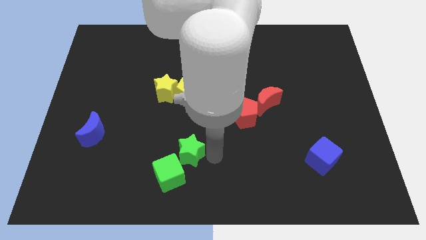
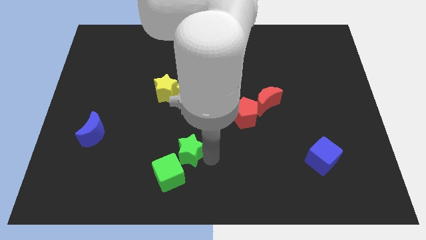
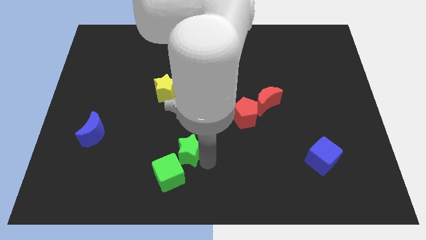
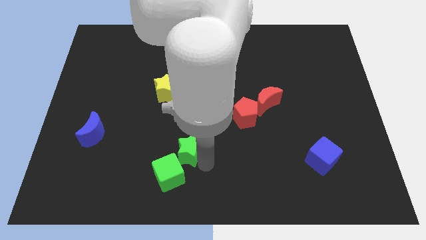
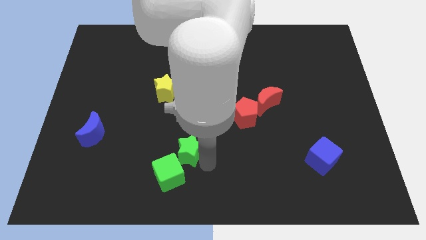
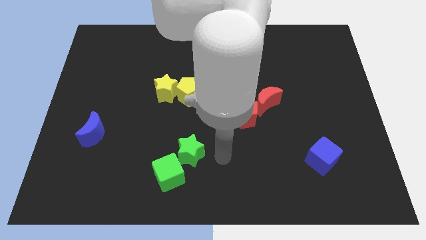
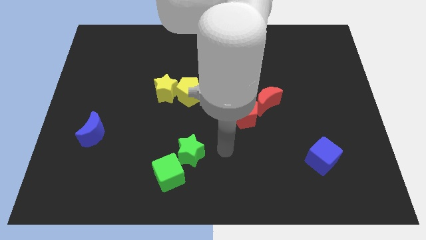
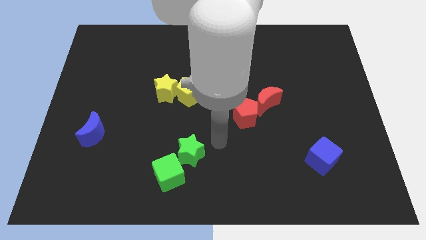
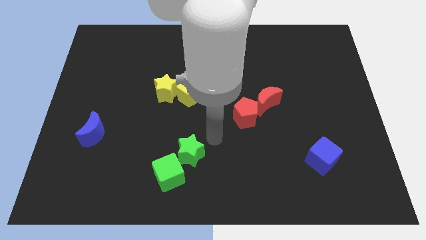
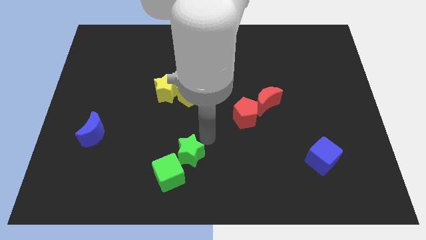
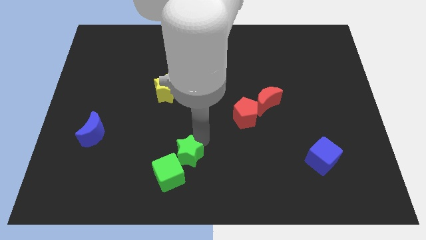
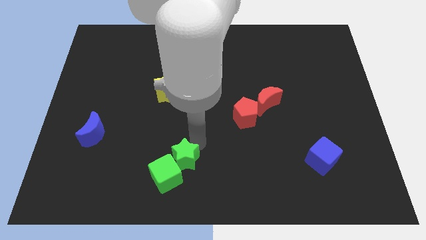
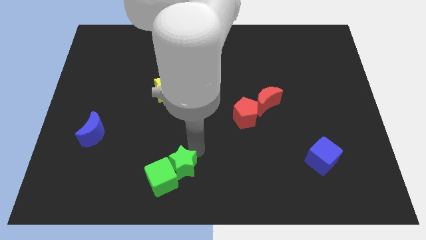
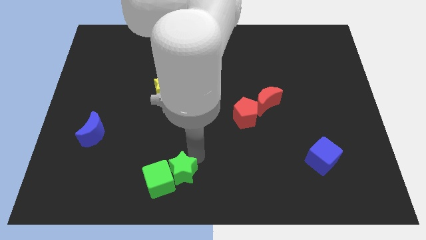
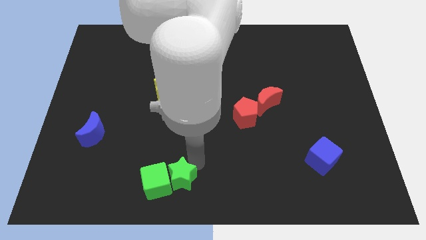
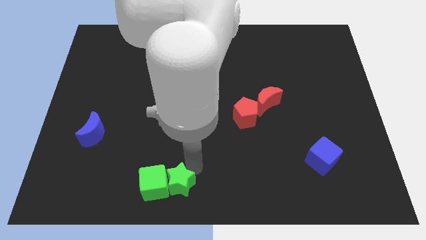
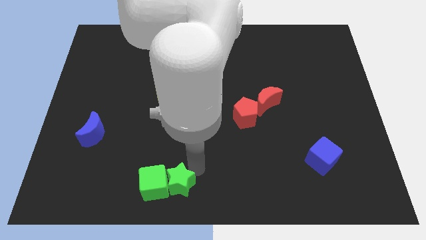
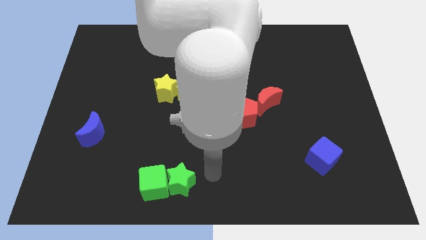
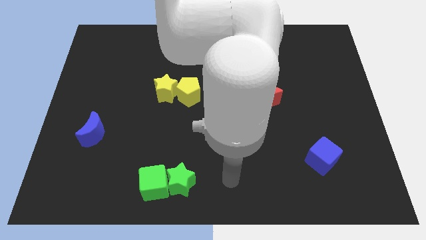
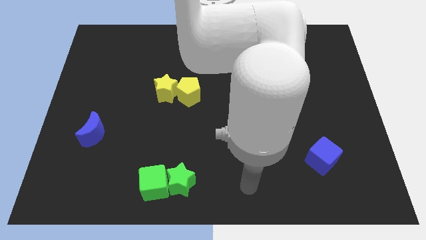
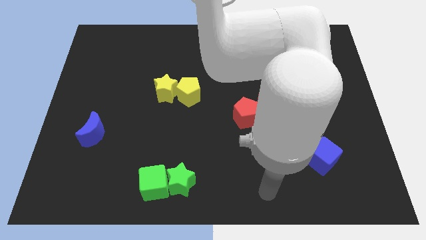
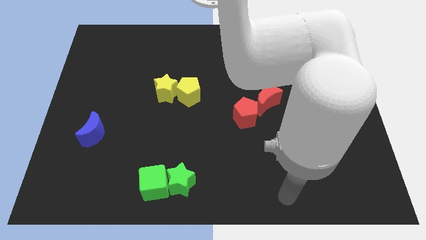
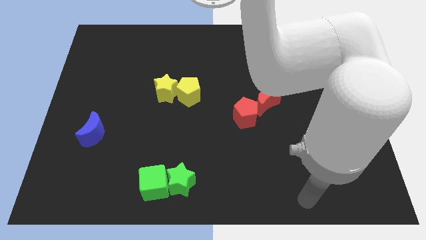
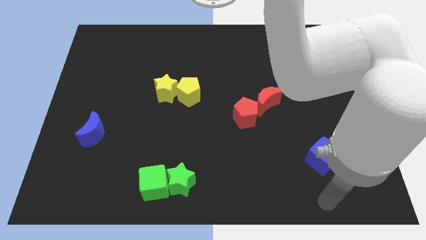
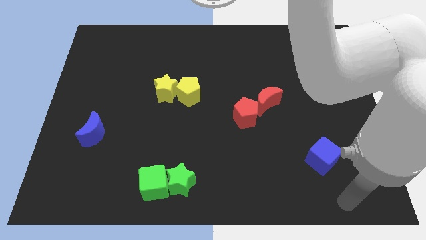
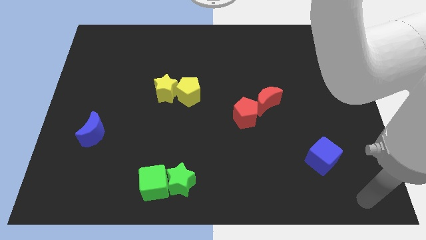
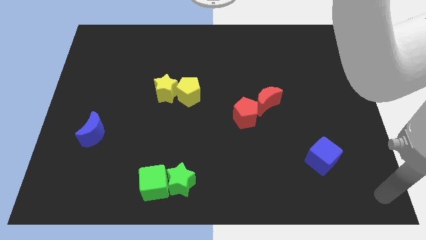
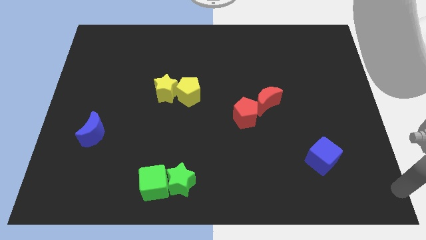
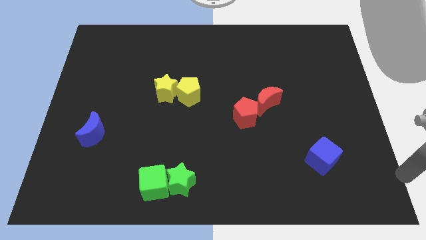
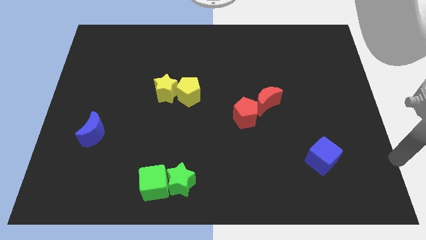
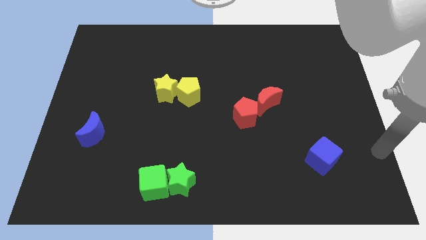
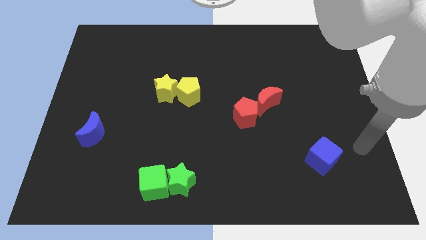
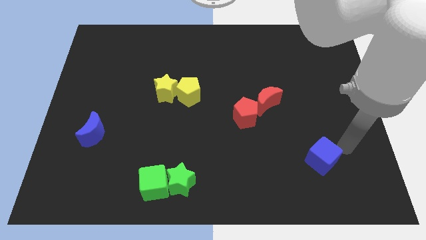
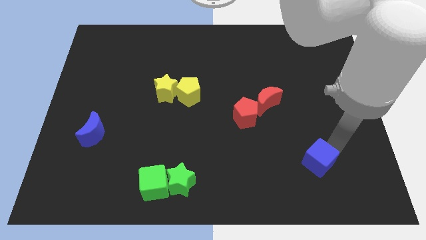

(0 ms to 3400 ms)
place the green blocks vertically to the bottom side of the yellow blocks

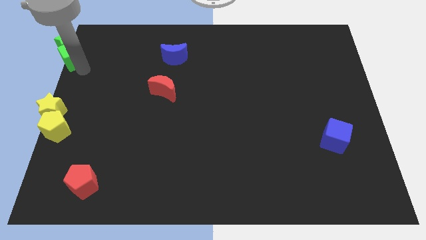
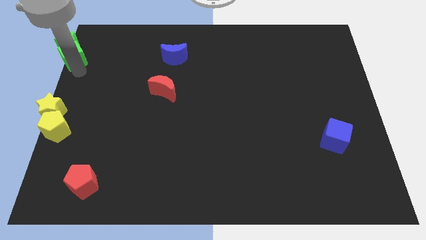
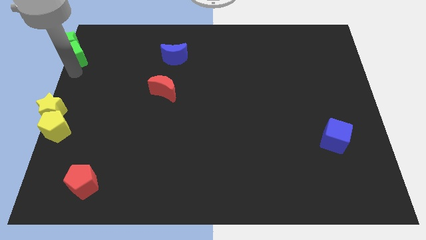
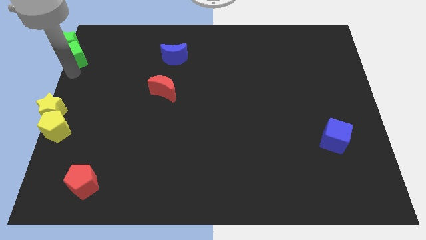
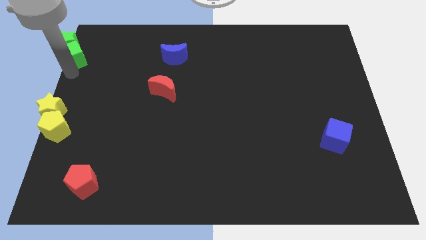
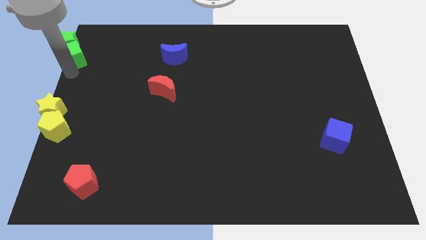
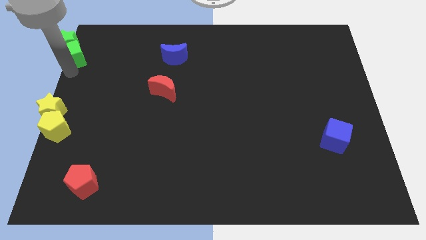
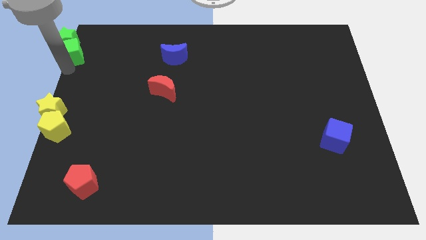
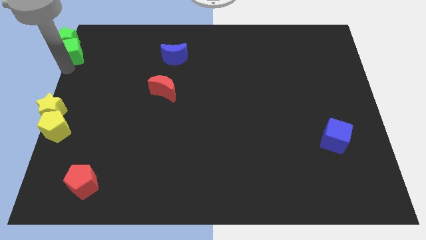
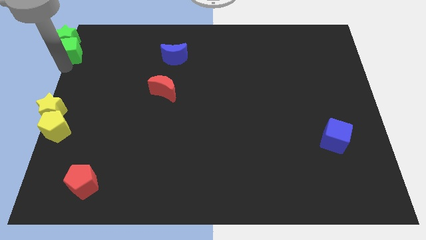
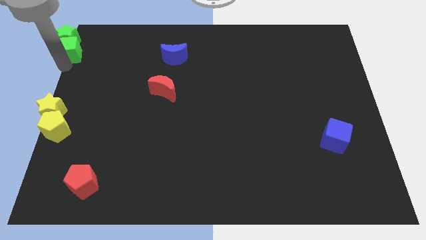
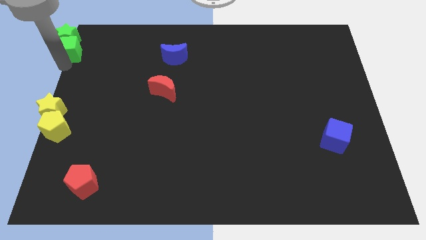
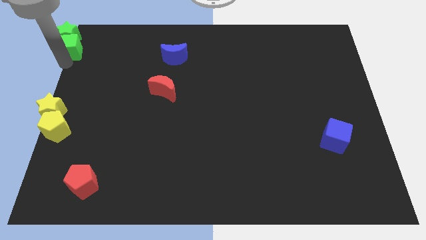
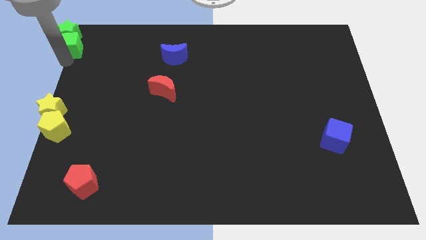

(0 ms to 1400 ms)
move the green blocks to the top left corner of the board

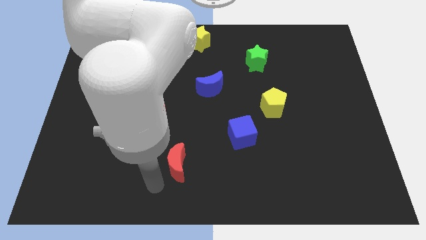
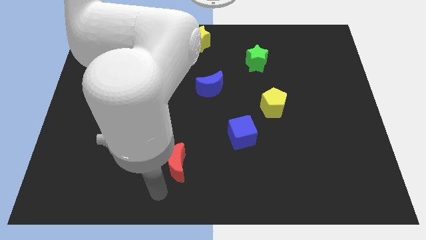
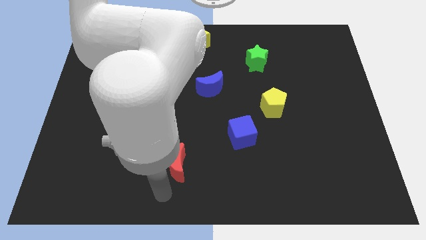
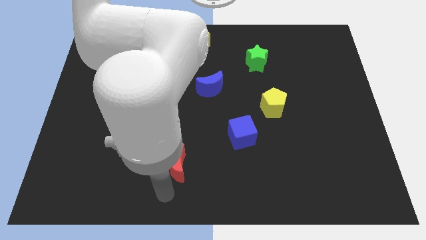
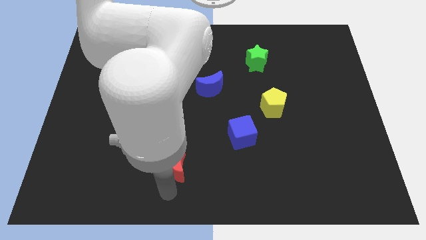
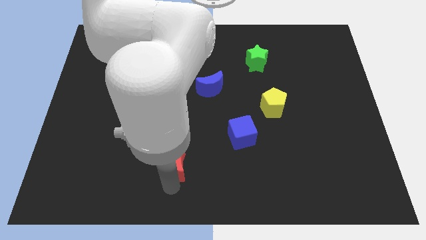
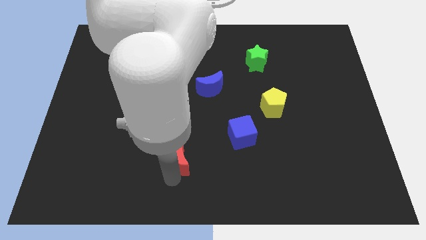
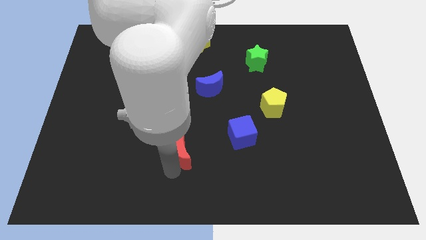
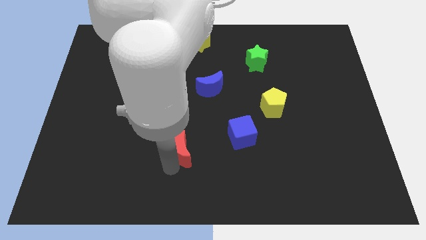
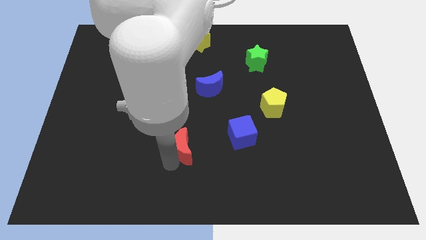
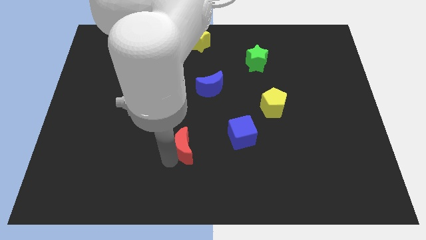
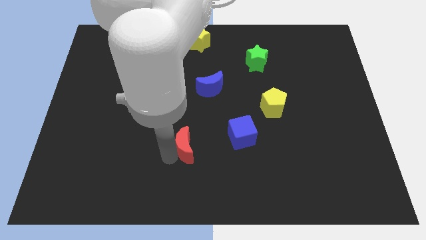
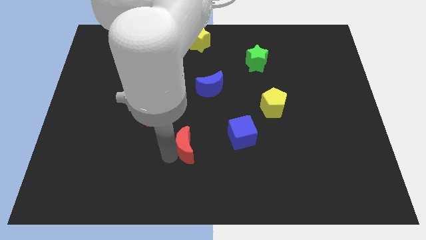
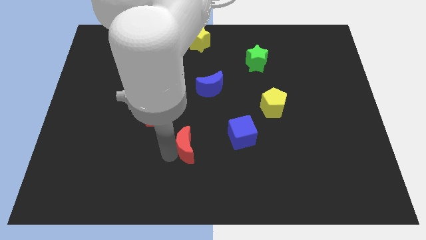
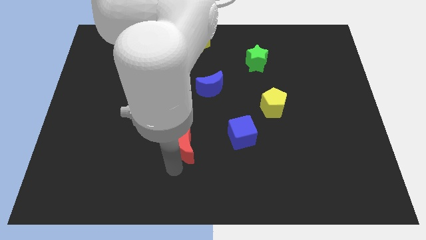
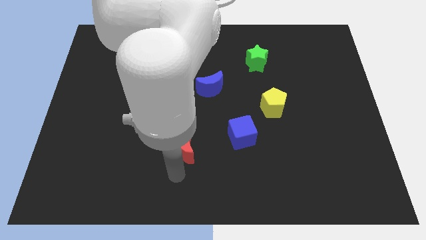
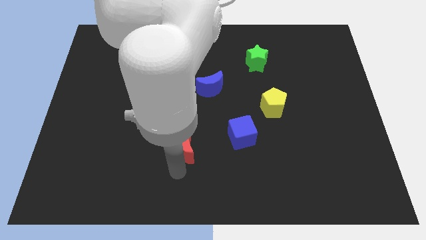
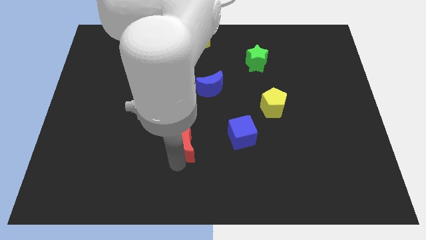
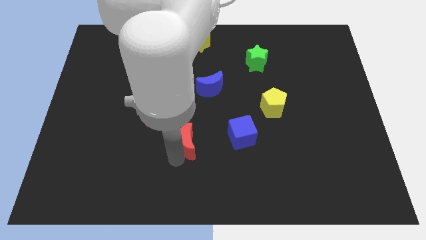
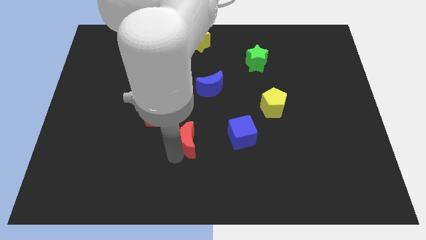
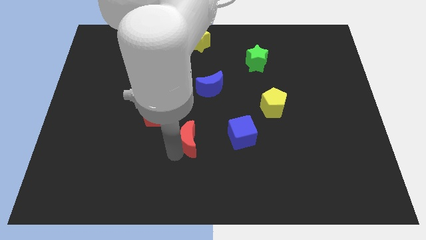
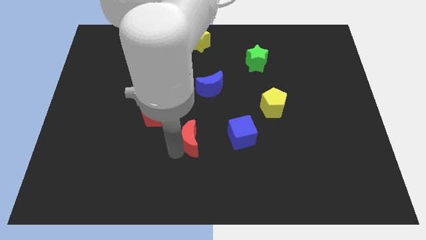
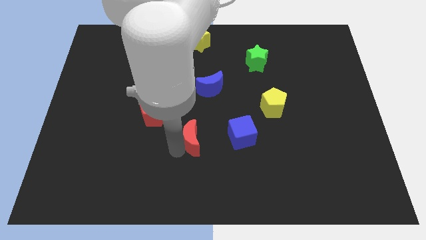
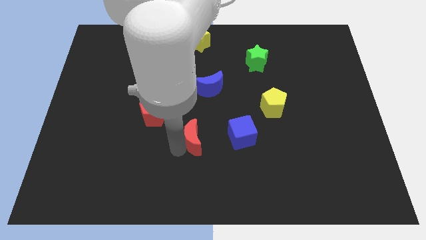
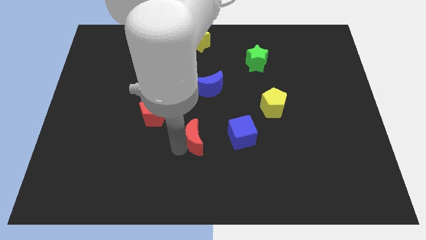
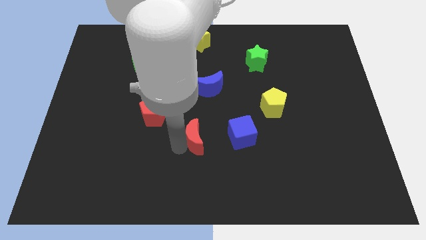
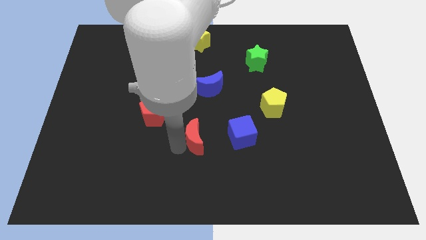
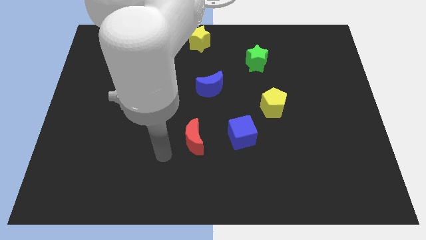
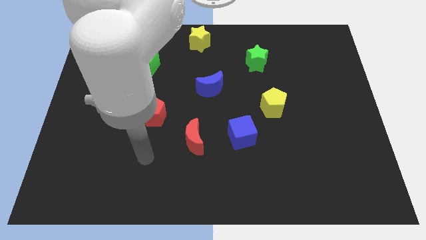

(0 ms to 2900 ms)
place the red crescent to the left side of blue cube

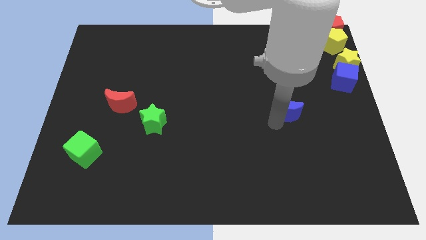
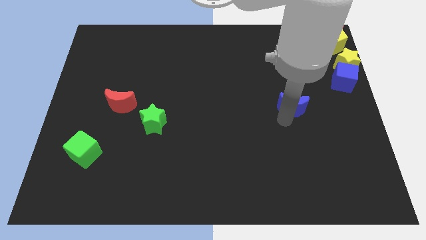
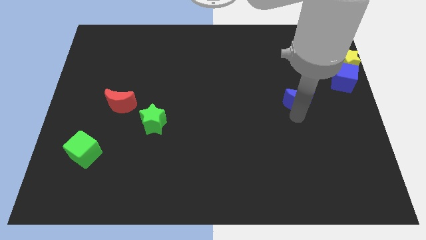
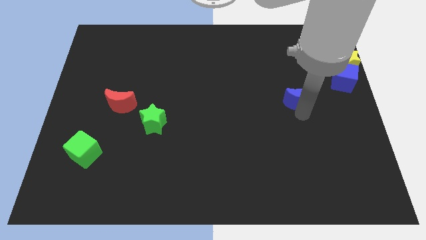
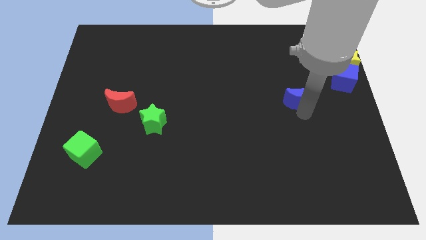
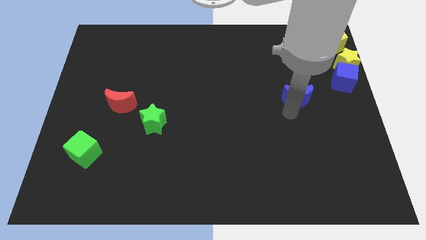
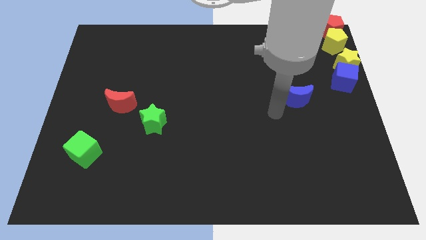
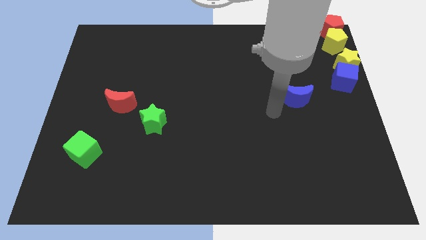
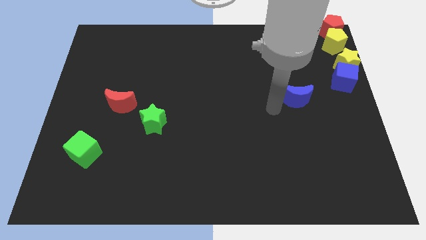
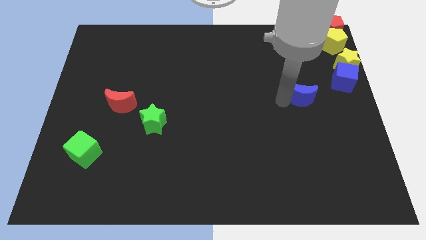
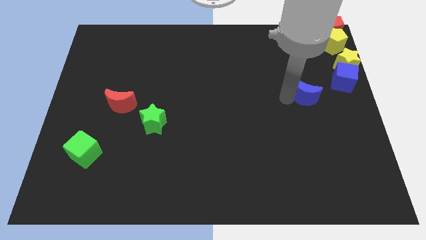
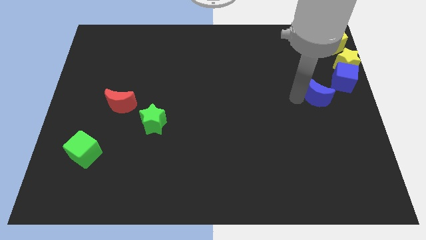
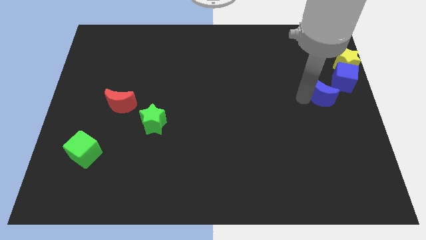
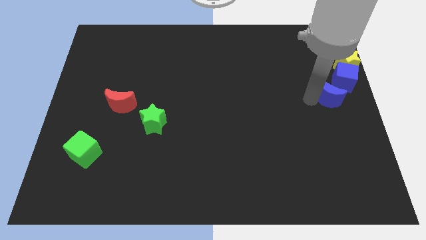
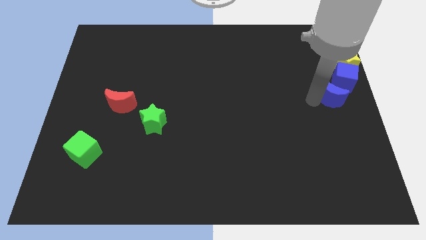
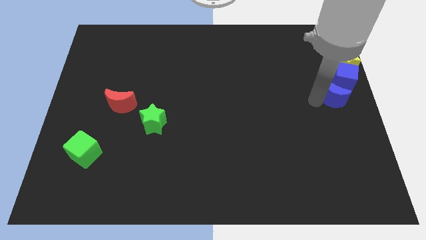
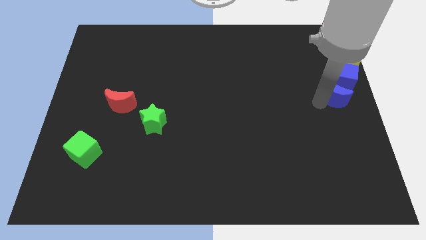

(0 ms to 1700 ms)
drag the blue crescent towards the bottom side of the blue cube
